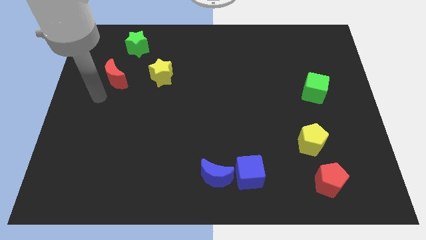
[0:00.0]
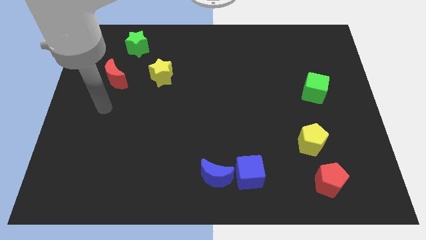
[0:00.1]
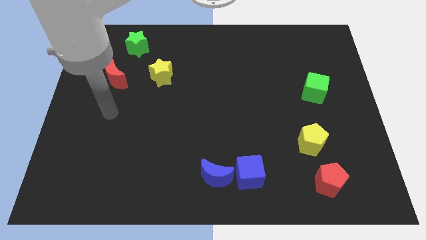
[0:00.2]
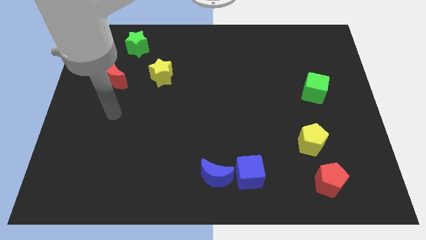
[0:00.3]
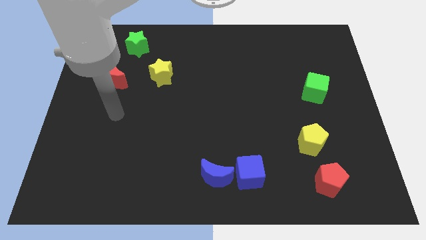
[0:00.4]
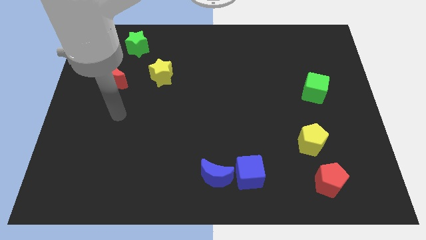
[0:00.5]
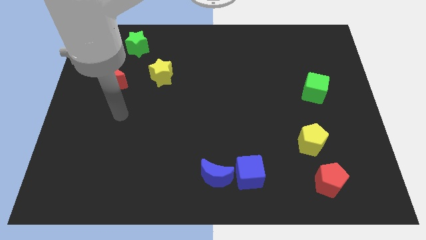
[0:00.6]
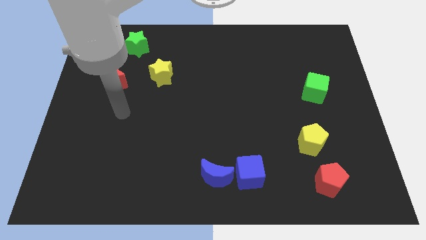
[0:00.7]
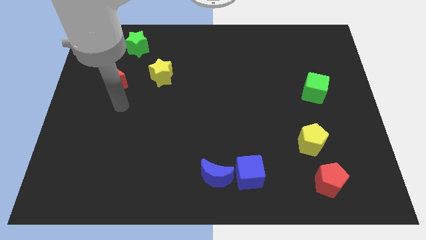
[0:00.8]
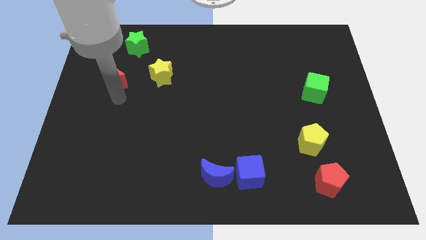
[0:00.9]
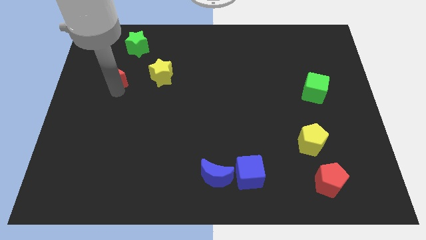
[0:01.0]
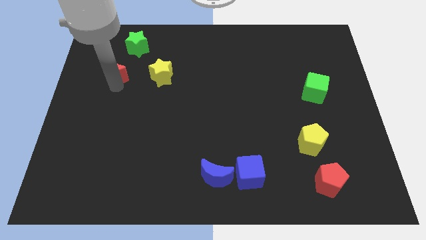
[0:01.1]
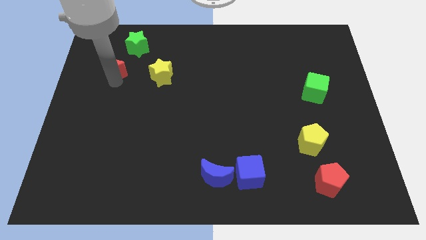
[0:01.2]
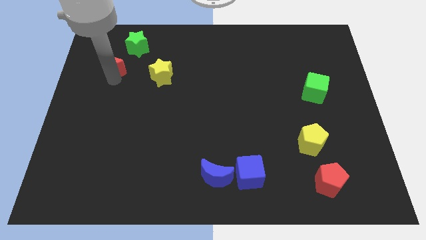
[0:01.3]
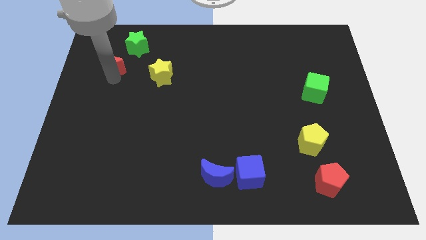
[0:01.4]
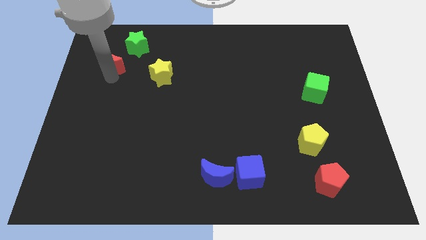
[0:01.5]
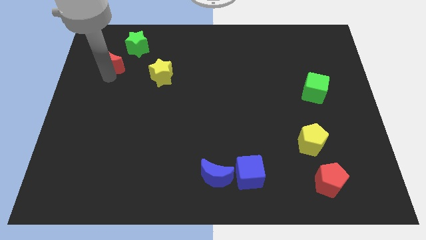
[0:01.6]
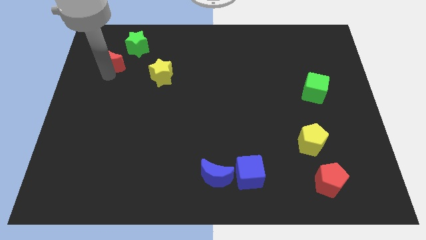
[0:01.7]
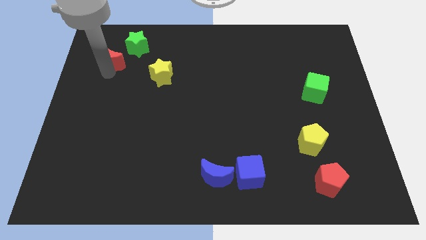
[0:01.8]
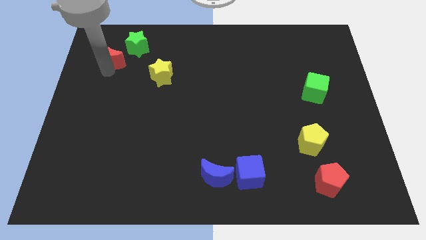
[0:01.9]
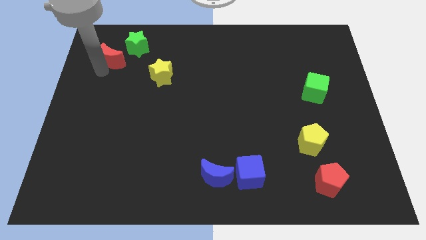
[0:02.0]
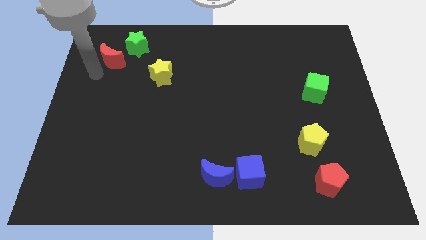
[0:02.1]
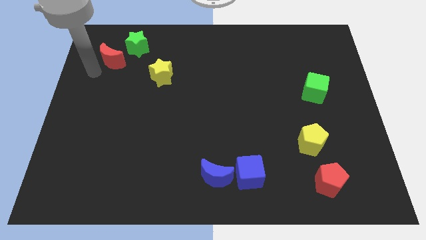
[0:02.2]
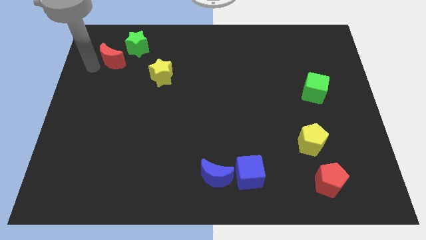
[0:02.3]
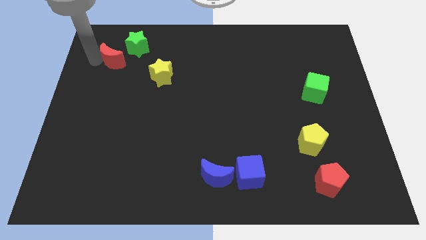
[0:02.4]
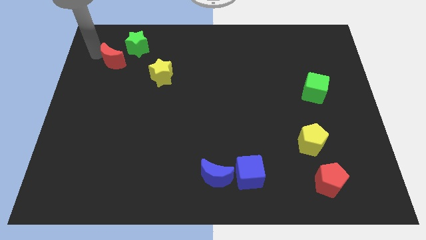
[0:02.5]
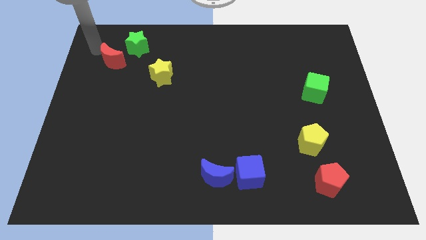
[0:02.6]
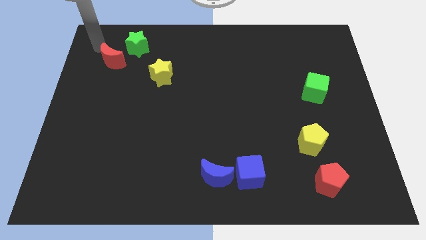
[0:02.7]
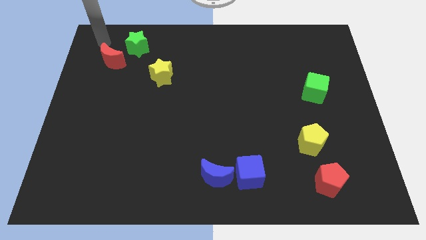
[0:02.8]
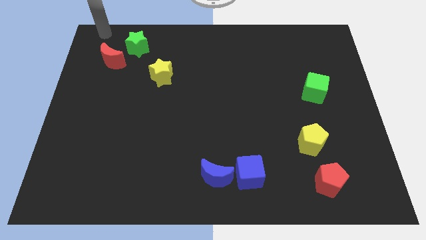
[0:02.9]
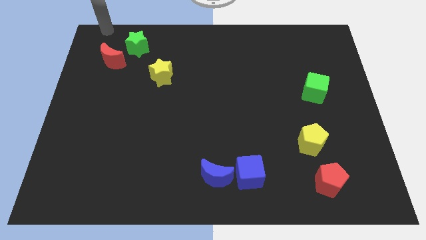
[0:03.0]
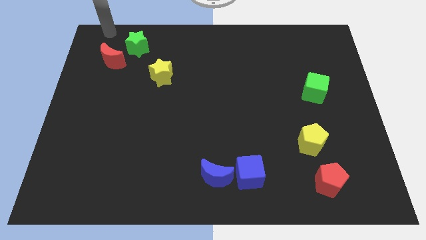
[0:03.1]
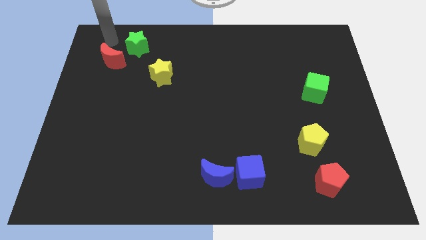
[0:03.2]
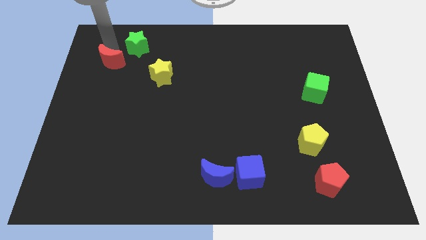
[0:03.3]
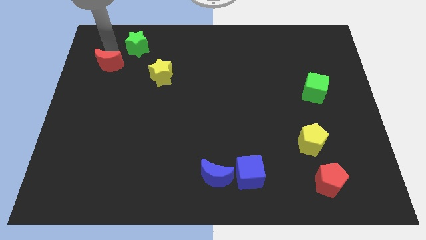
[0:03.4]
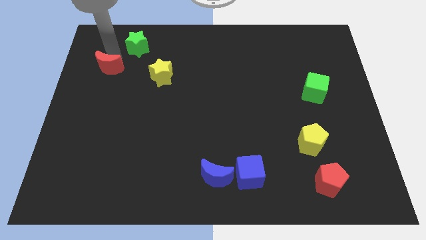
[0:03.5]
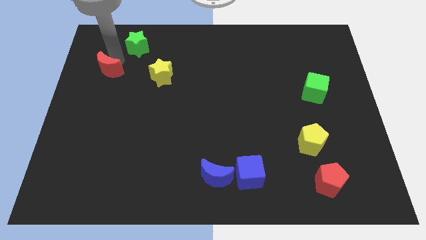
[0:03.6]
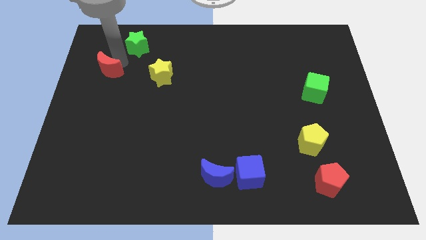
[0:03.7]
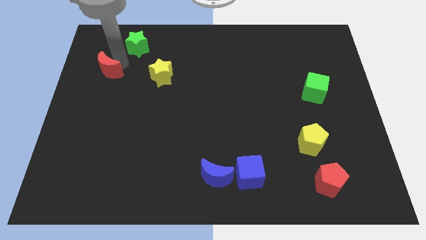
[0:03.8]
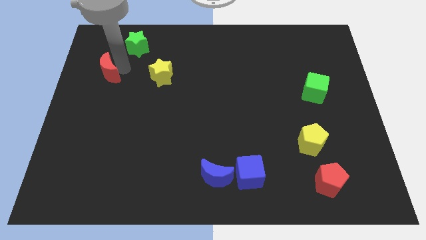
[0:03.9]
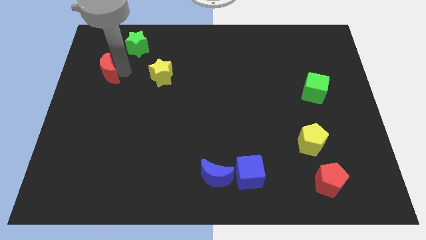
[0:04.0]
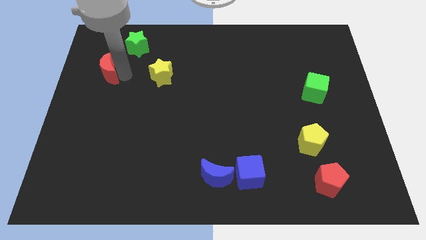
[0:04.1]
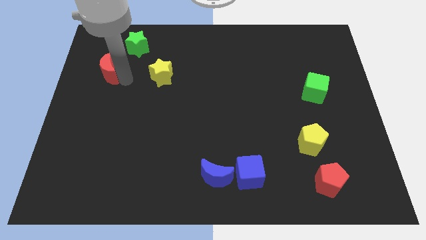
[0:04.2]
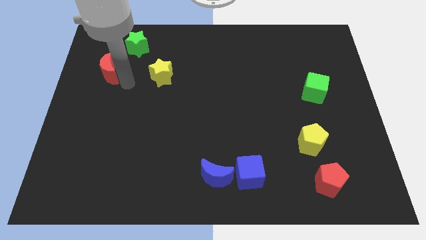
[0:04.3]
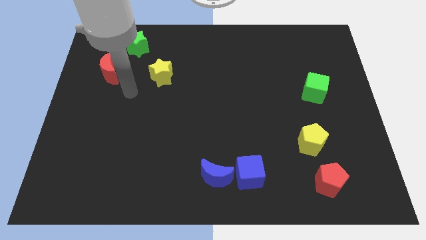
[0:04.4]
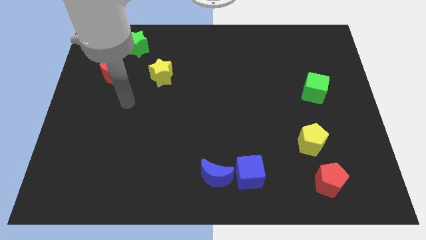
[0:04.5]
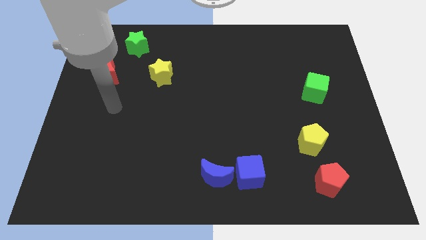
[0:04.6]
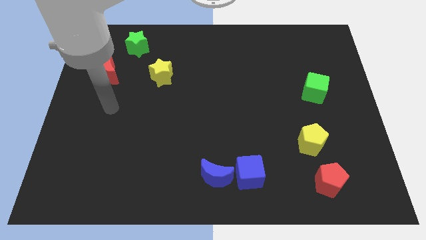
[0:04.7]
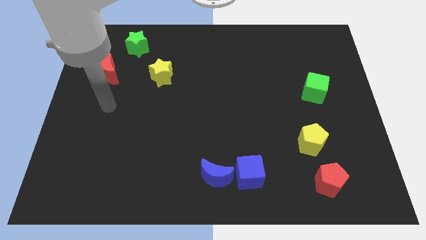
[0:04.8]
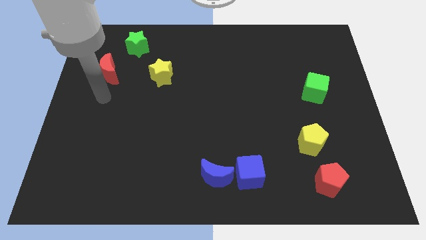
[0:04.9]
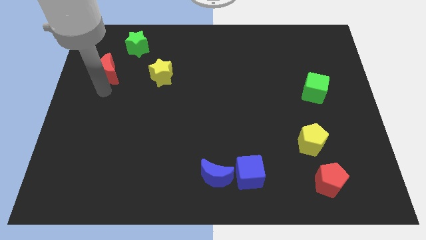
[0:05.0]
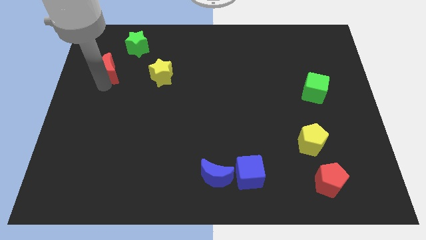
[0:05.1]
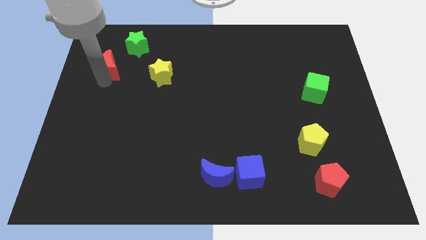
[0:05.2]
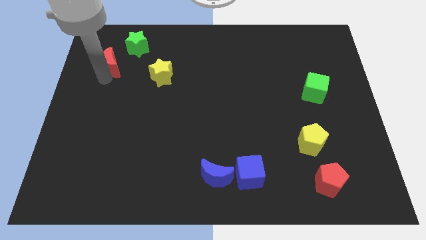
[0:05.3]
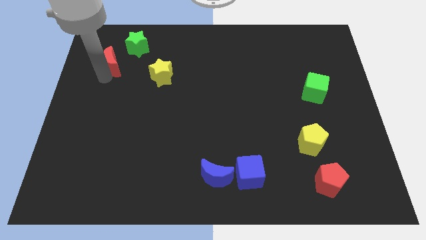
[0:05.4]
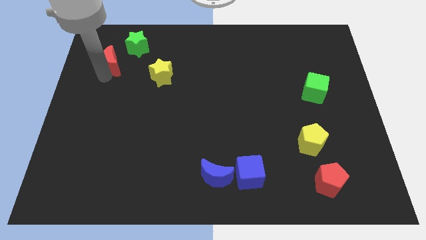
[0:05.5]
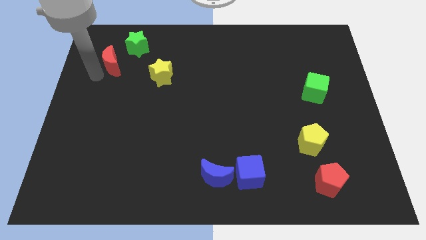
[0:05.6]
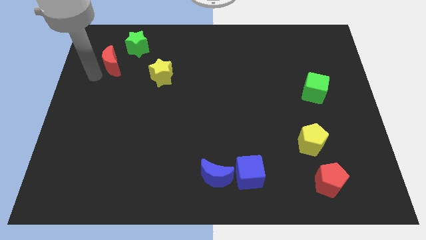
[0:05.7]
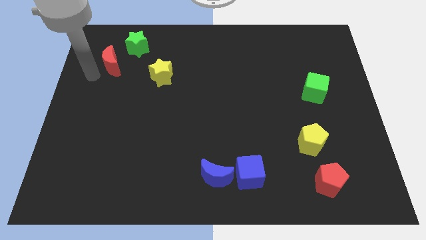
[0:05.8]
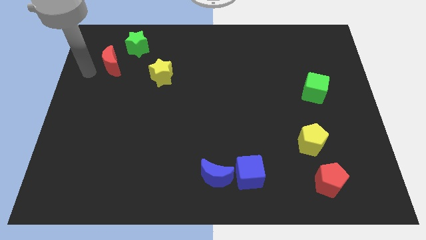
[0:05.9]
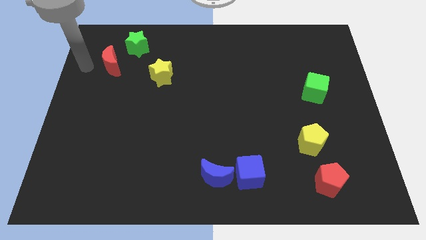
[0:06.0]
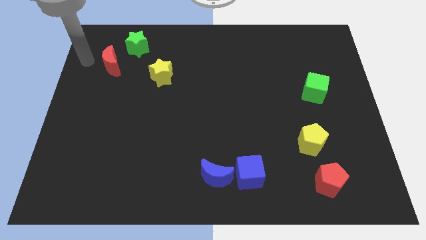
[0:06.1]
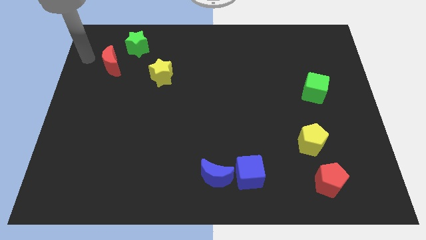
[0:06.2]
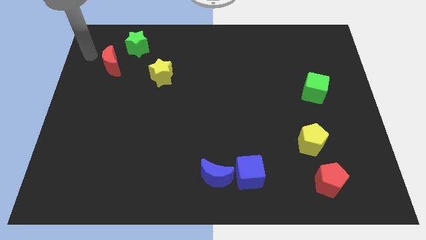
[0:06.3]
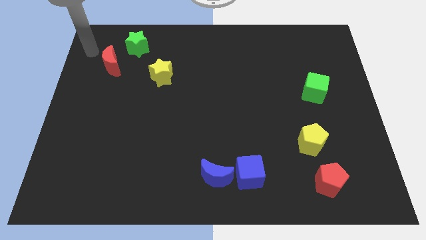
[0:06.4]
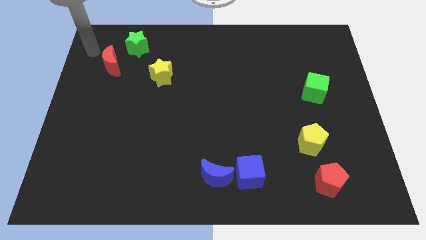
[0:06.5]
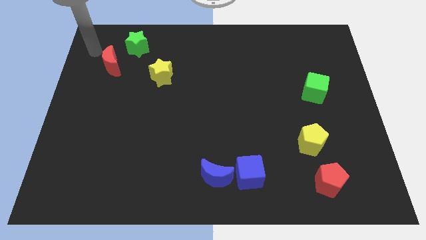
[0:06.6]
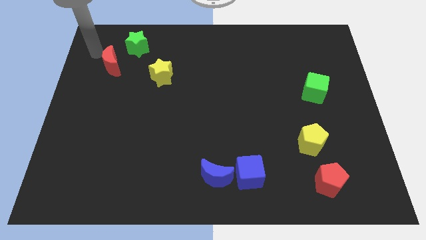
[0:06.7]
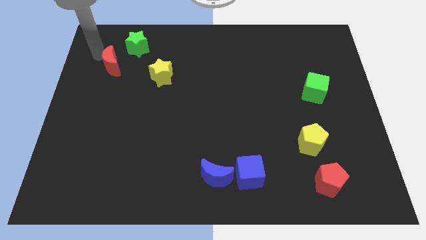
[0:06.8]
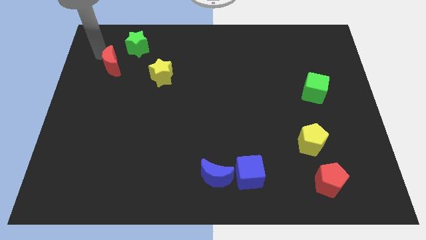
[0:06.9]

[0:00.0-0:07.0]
move the red crescent to the top of the board

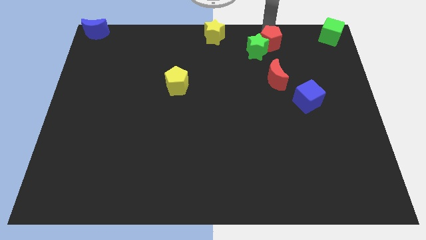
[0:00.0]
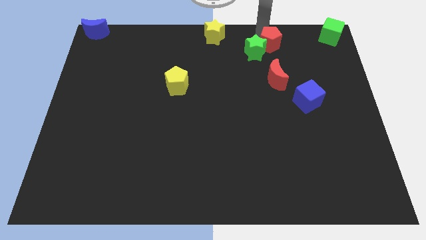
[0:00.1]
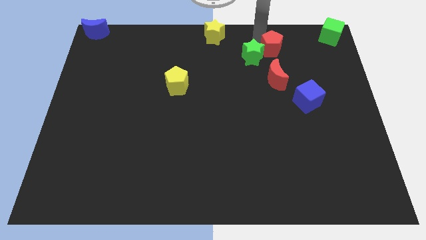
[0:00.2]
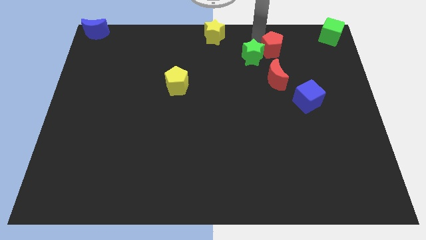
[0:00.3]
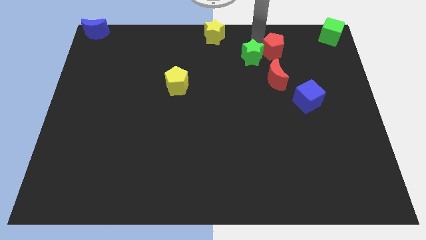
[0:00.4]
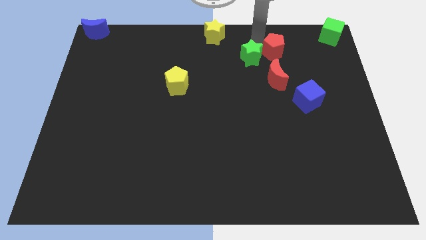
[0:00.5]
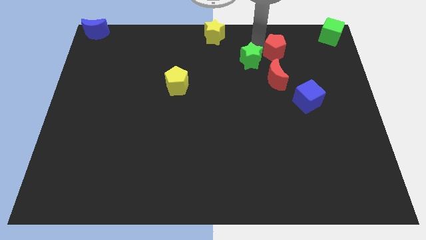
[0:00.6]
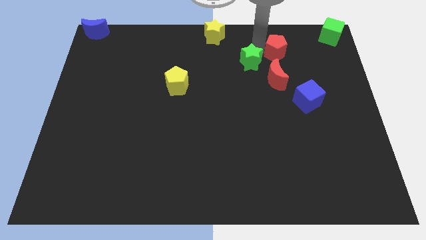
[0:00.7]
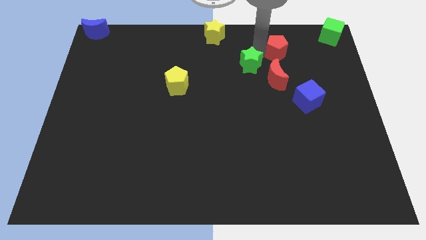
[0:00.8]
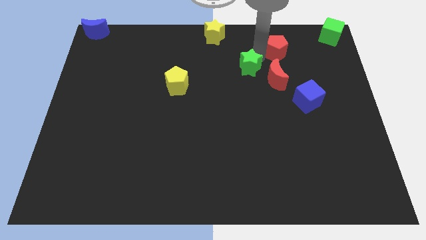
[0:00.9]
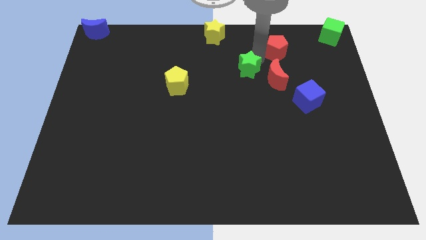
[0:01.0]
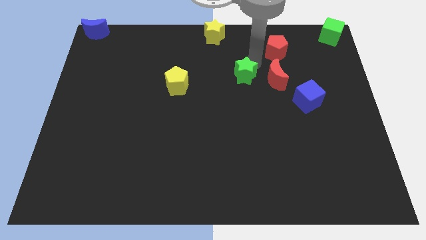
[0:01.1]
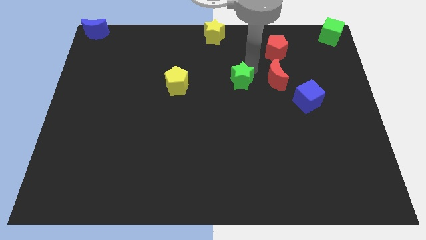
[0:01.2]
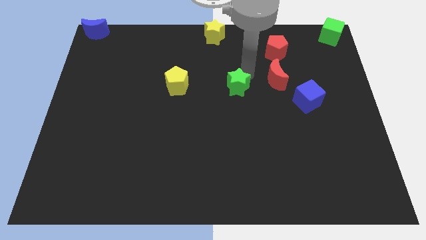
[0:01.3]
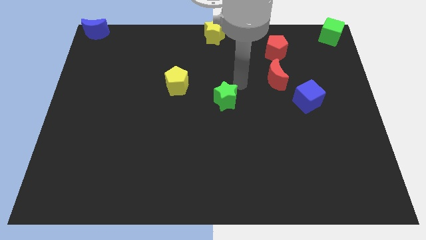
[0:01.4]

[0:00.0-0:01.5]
separate the green star from the red pentagon

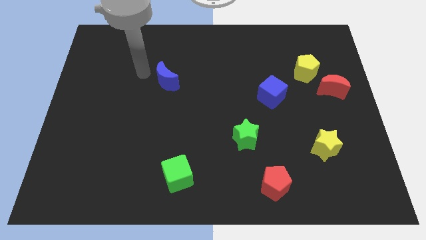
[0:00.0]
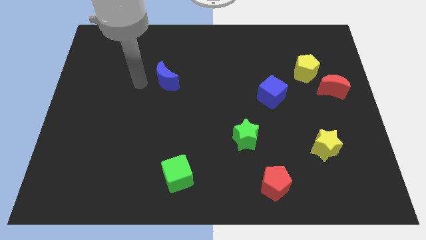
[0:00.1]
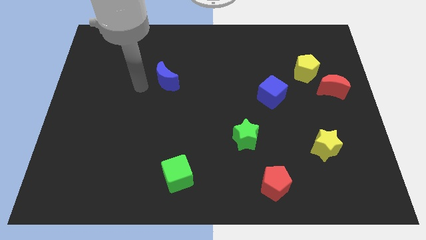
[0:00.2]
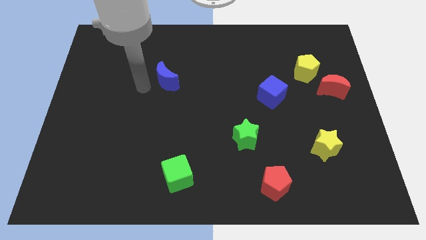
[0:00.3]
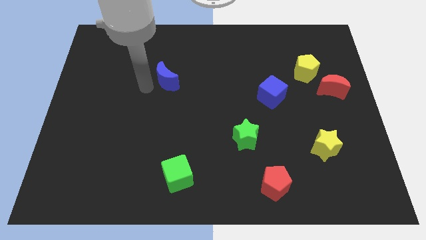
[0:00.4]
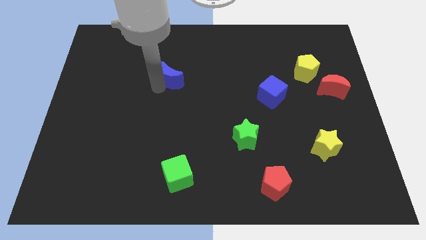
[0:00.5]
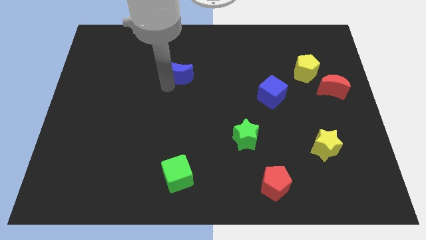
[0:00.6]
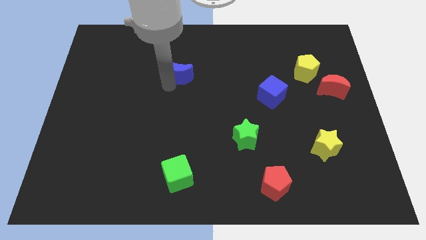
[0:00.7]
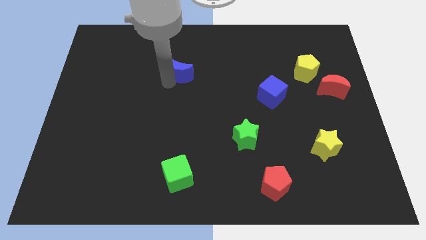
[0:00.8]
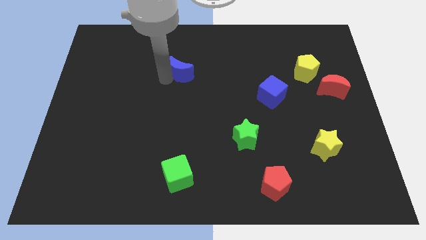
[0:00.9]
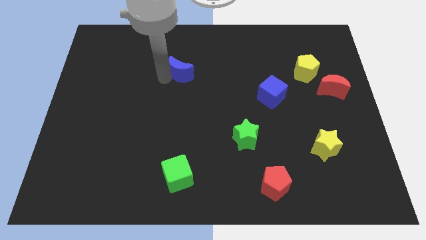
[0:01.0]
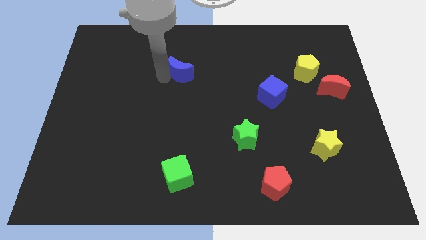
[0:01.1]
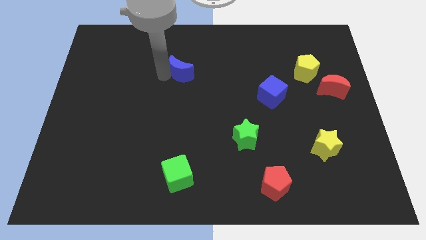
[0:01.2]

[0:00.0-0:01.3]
push the blue crescent to the top of the board
